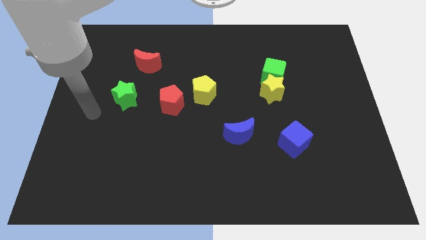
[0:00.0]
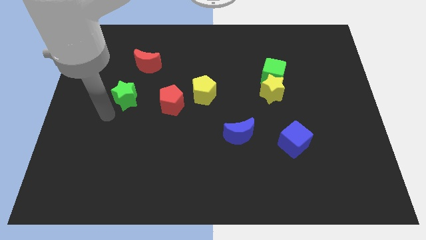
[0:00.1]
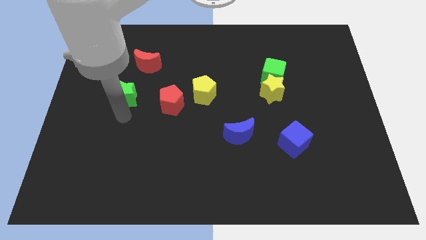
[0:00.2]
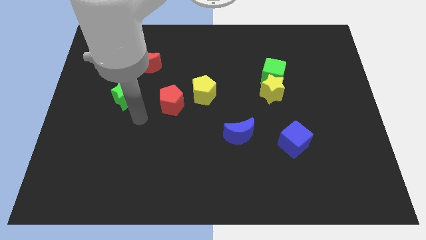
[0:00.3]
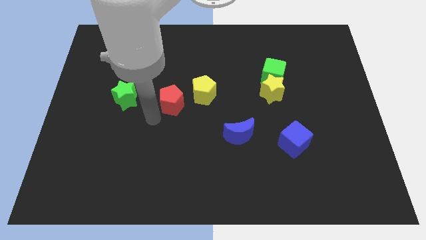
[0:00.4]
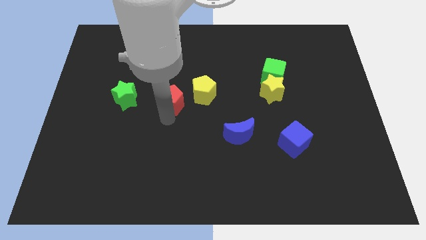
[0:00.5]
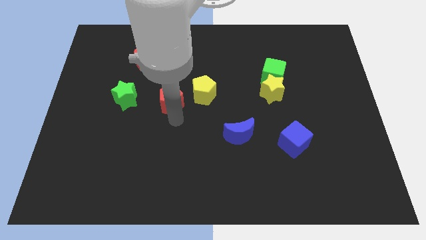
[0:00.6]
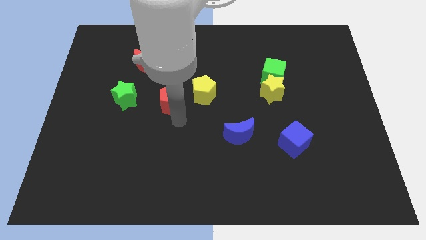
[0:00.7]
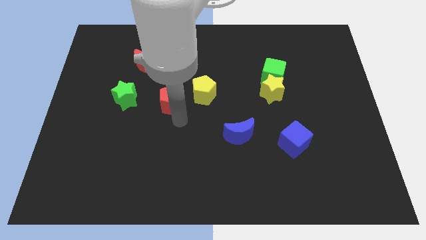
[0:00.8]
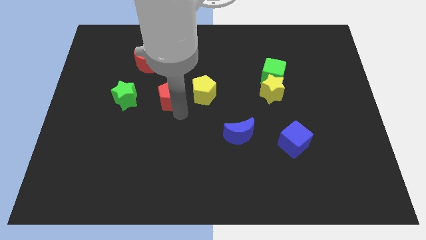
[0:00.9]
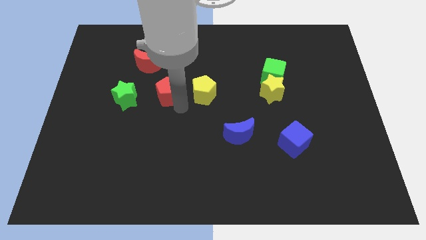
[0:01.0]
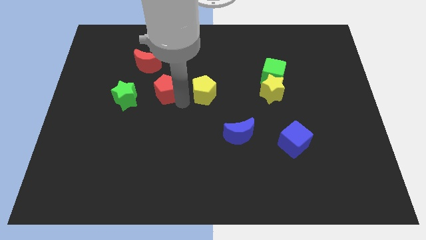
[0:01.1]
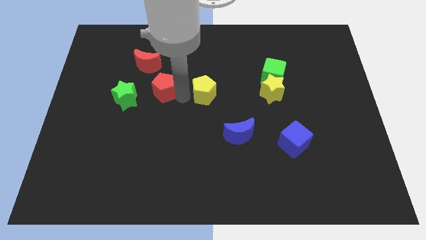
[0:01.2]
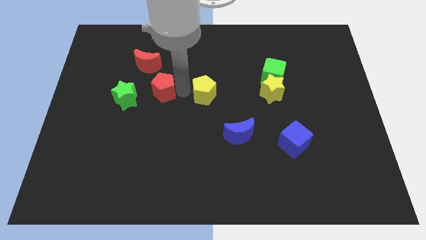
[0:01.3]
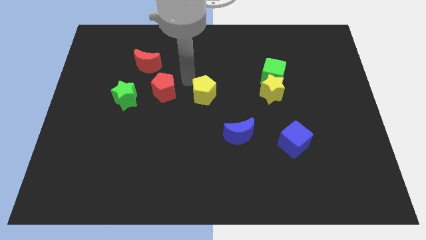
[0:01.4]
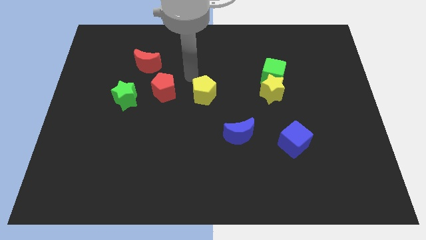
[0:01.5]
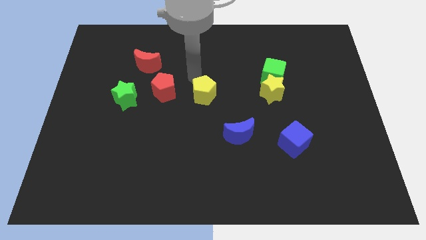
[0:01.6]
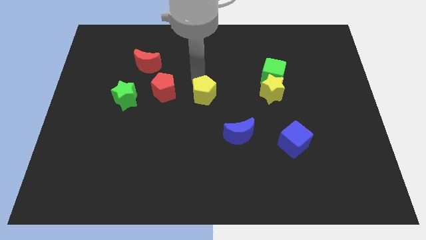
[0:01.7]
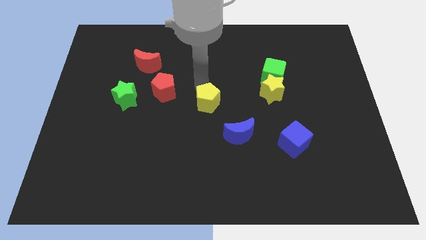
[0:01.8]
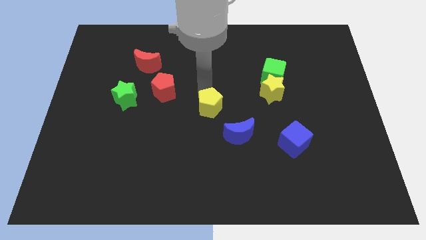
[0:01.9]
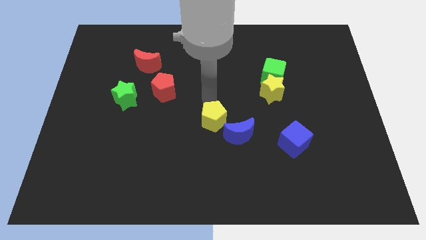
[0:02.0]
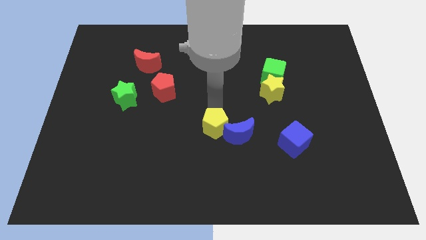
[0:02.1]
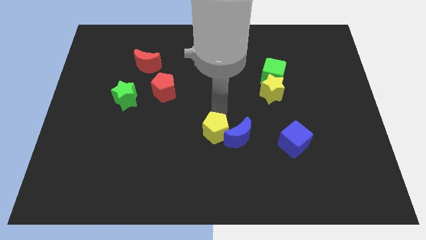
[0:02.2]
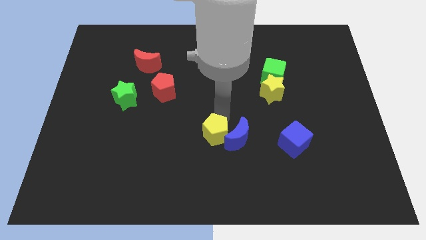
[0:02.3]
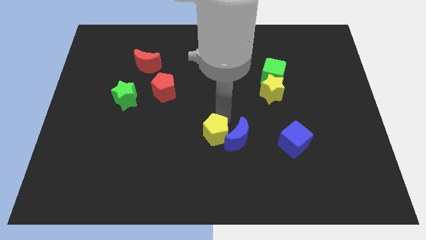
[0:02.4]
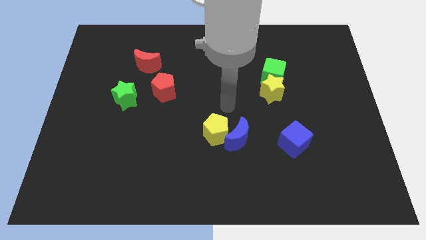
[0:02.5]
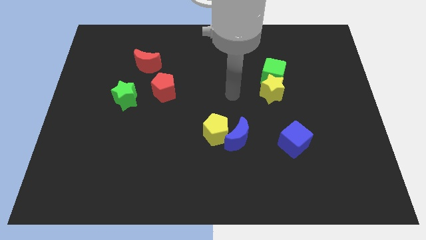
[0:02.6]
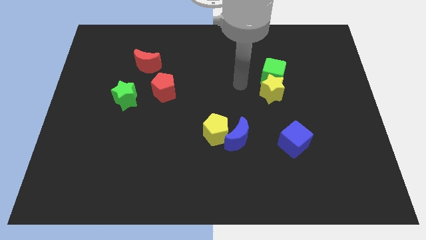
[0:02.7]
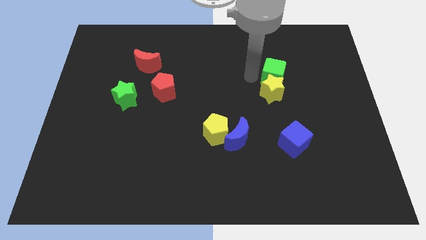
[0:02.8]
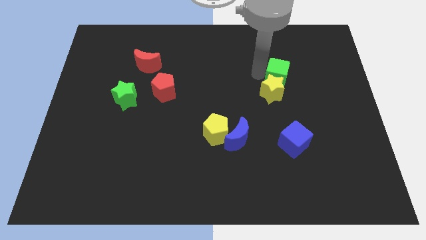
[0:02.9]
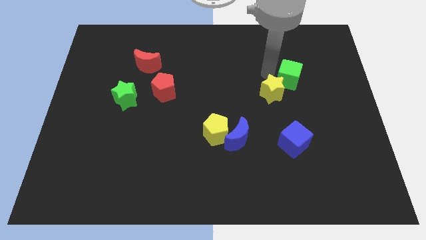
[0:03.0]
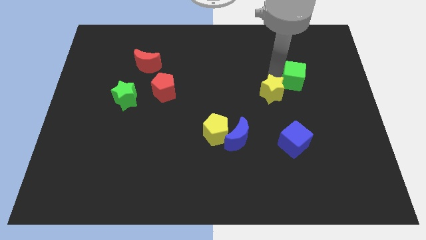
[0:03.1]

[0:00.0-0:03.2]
make a triangle with red pentagon yellow pentagon and green cube

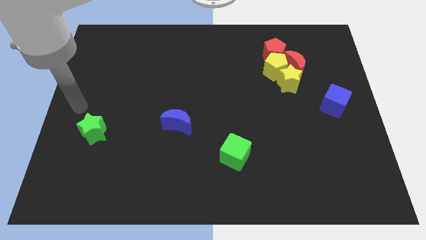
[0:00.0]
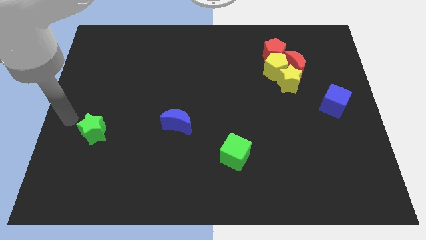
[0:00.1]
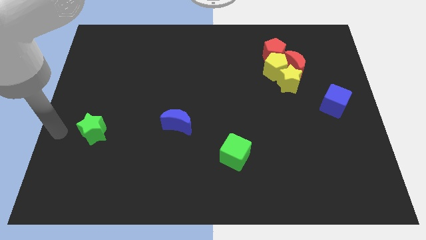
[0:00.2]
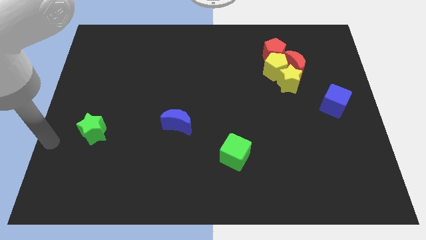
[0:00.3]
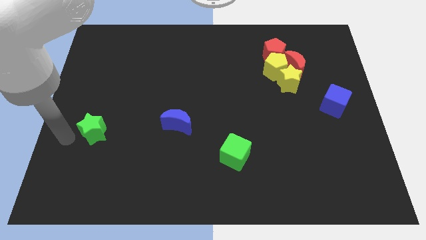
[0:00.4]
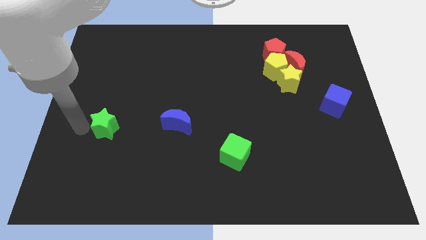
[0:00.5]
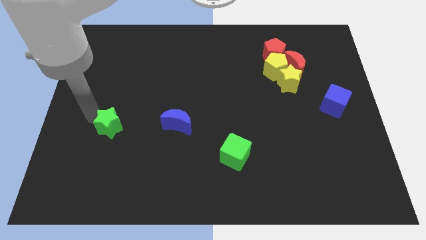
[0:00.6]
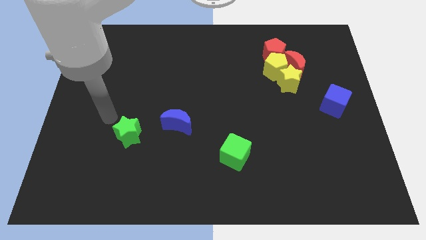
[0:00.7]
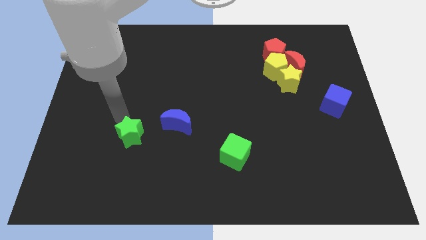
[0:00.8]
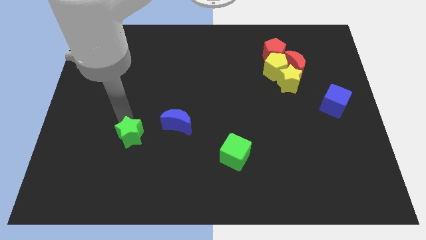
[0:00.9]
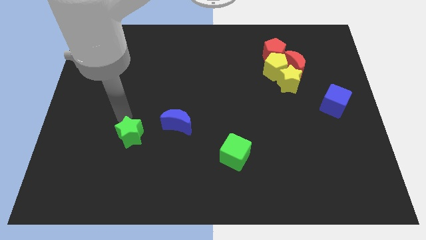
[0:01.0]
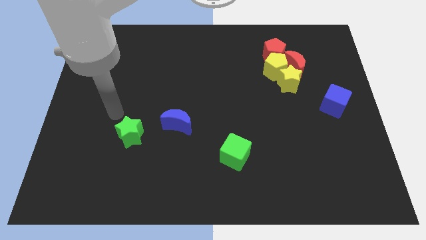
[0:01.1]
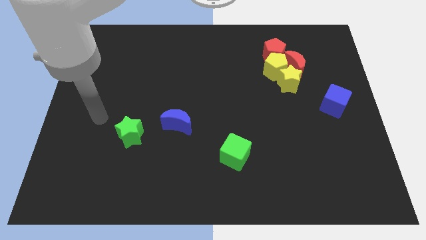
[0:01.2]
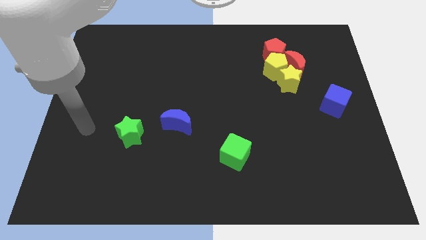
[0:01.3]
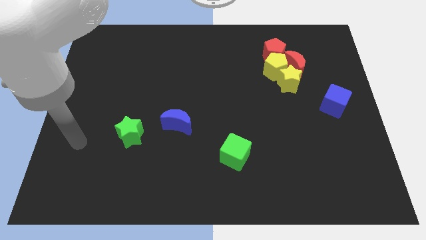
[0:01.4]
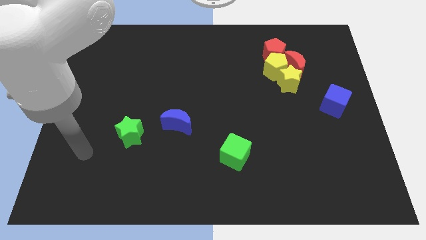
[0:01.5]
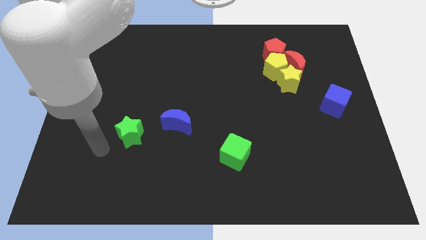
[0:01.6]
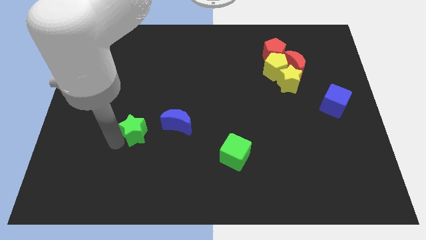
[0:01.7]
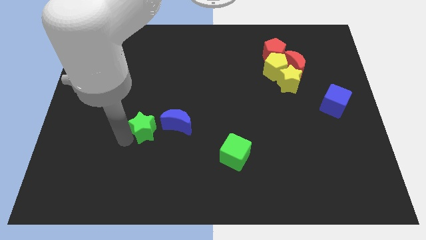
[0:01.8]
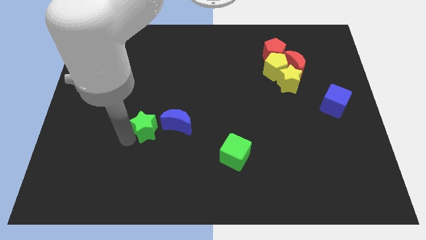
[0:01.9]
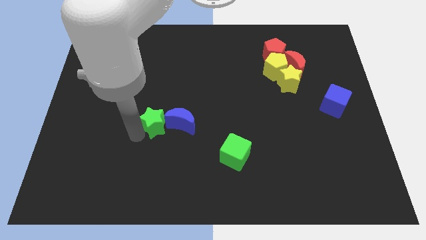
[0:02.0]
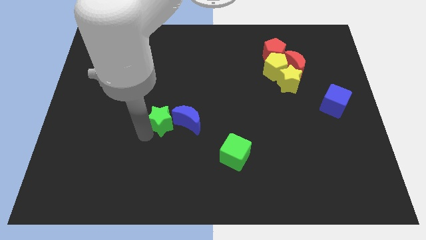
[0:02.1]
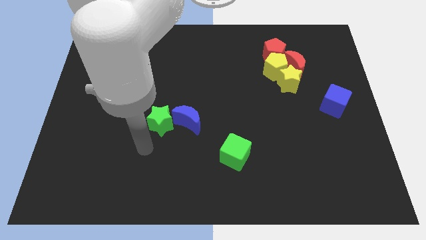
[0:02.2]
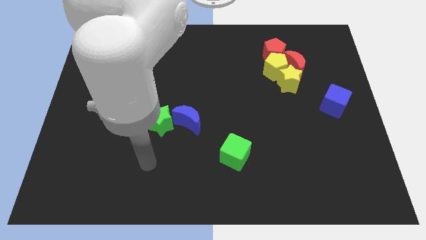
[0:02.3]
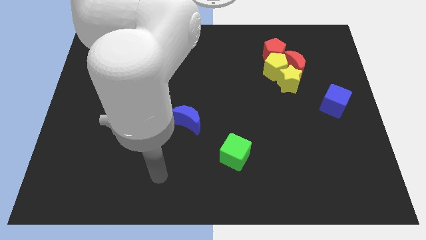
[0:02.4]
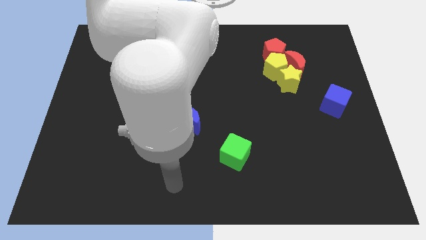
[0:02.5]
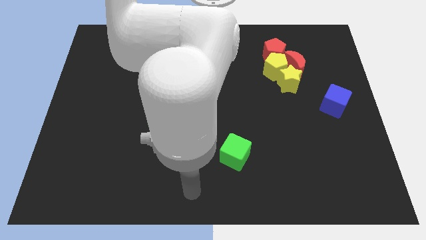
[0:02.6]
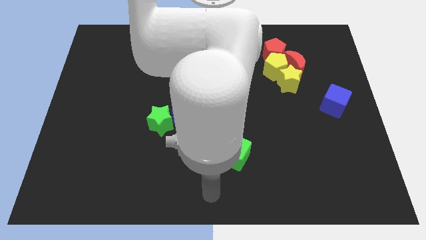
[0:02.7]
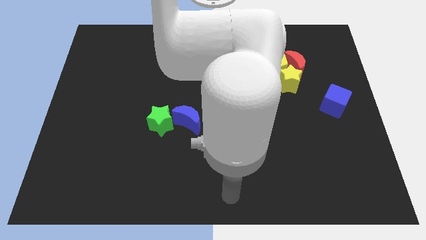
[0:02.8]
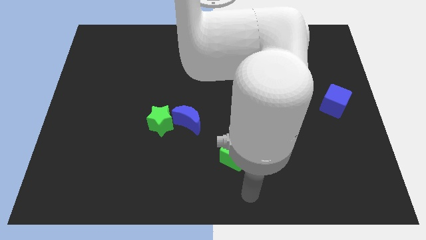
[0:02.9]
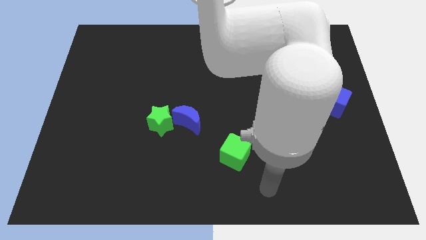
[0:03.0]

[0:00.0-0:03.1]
place the green star near to the blue moon

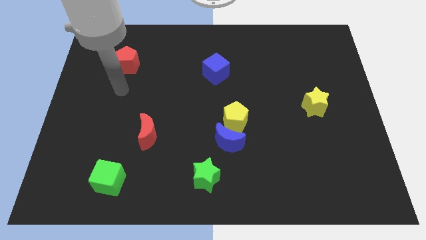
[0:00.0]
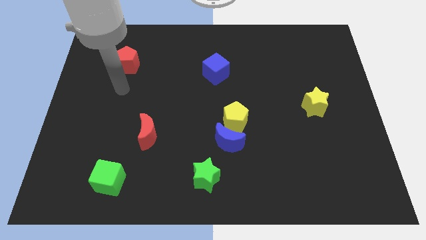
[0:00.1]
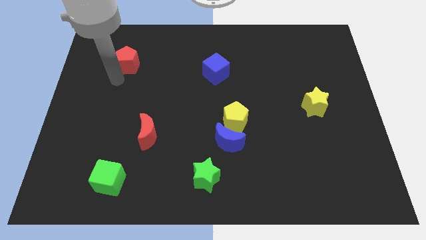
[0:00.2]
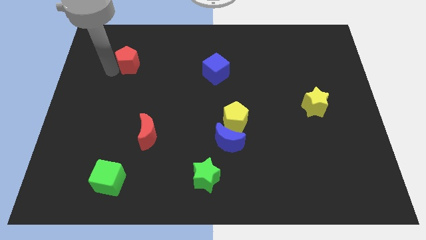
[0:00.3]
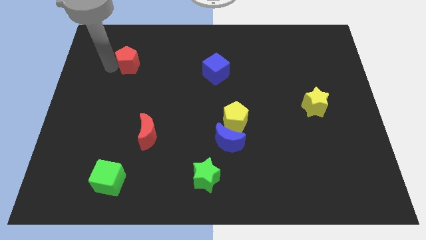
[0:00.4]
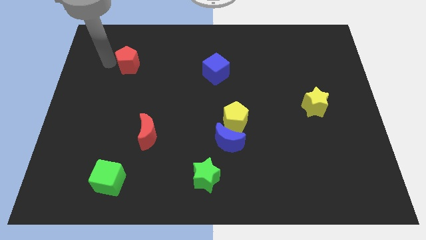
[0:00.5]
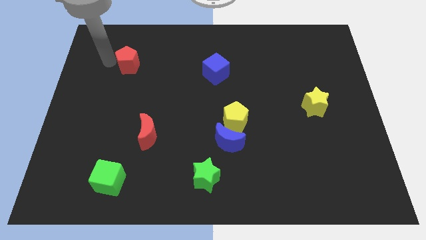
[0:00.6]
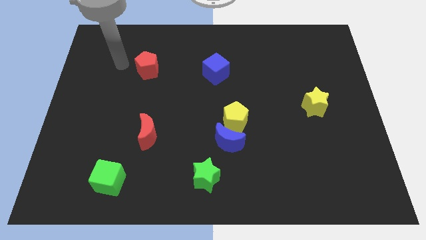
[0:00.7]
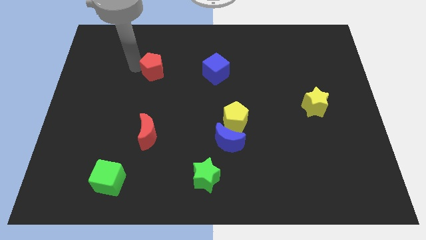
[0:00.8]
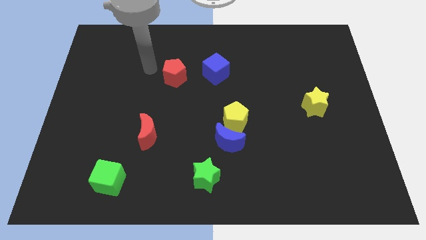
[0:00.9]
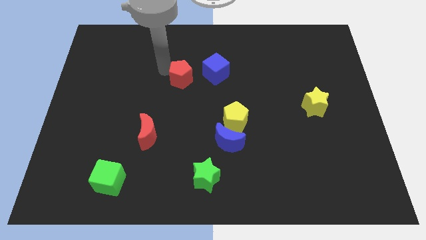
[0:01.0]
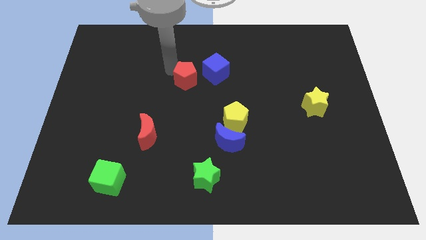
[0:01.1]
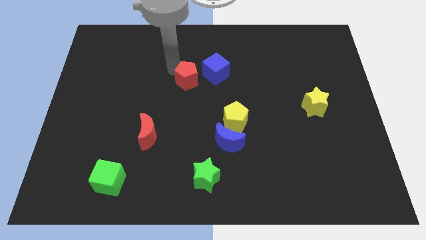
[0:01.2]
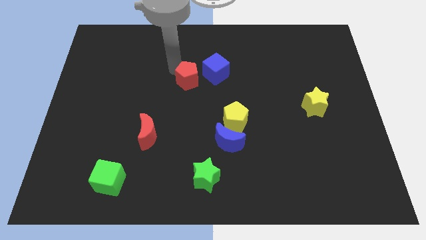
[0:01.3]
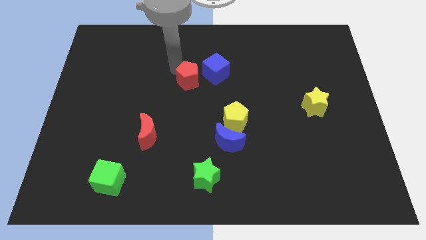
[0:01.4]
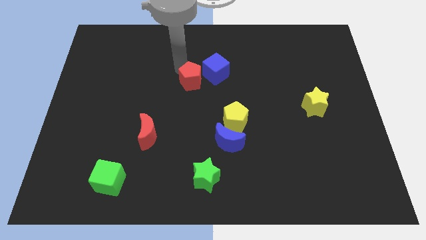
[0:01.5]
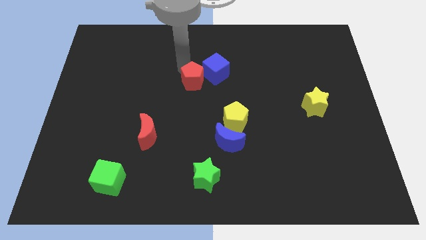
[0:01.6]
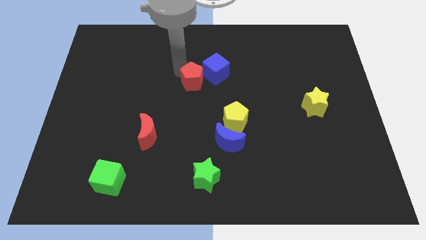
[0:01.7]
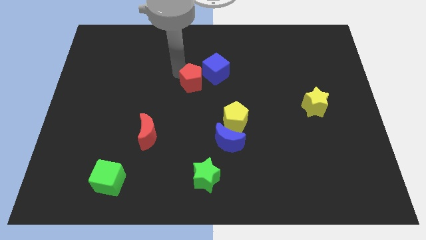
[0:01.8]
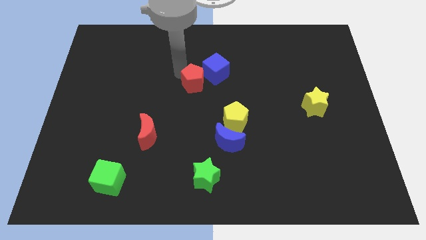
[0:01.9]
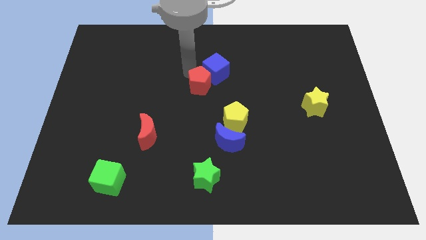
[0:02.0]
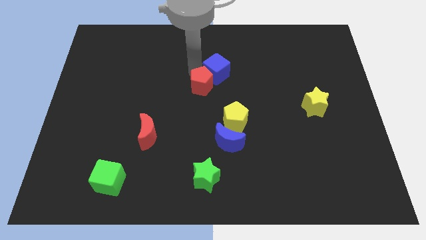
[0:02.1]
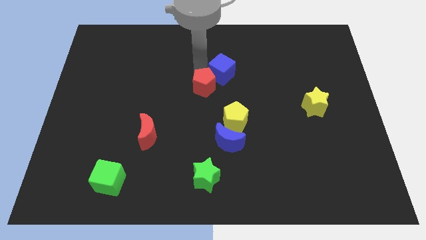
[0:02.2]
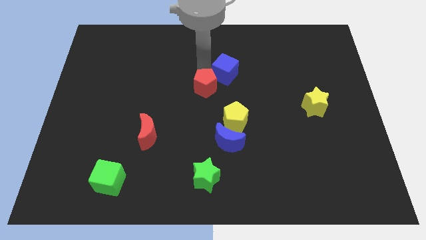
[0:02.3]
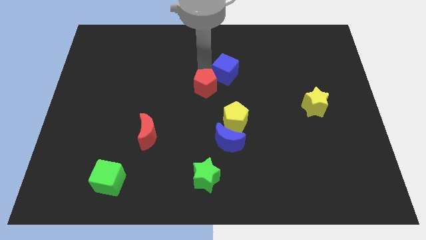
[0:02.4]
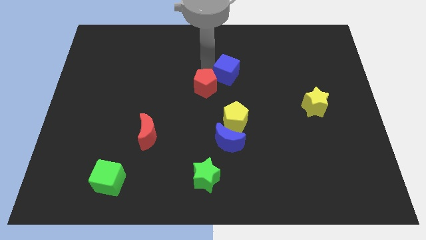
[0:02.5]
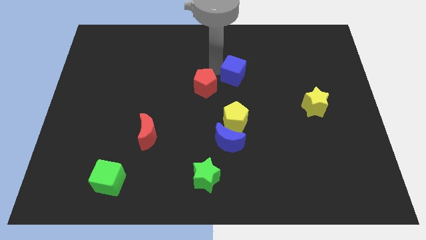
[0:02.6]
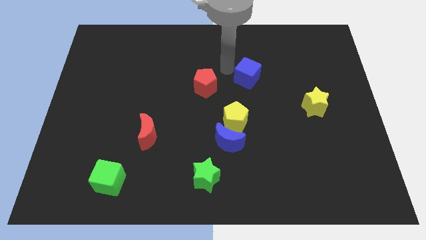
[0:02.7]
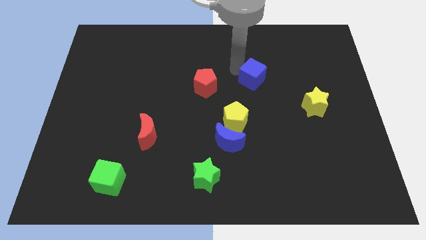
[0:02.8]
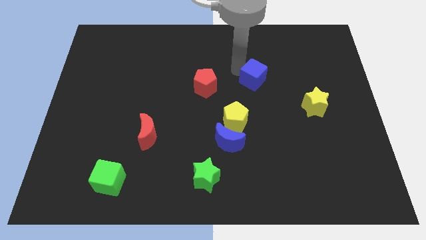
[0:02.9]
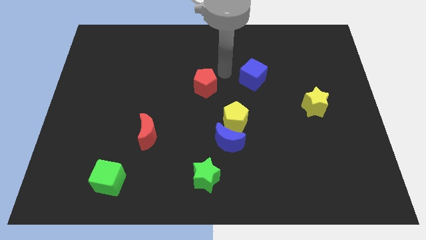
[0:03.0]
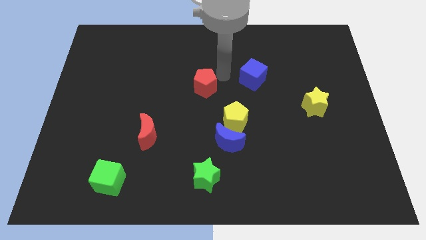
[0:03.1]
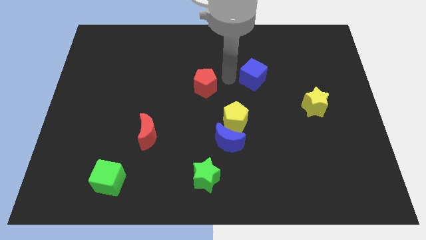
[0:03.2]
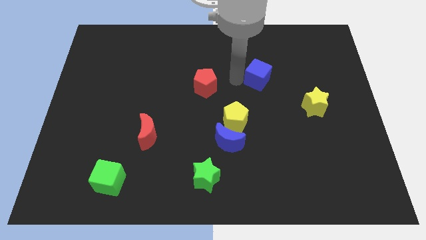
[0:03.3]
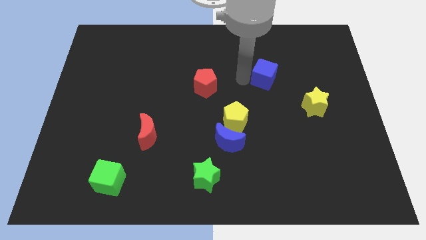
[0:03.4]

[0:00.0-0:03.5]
push the blue cube to the right
